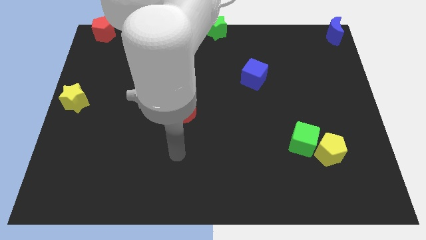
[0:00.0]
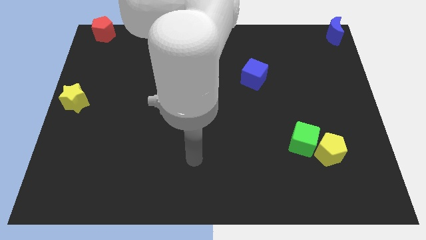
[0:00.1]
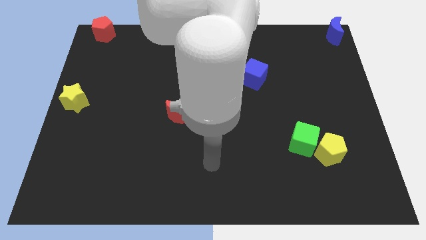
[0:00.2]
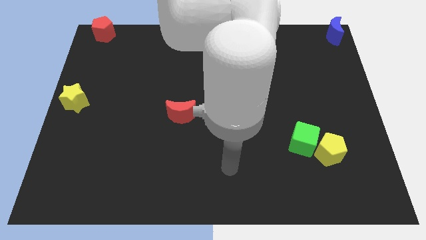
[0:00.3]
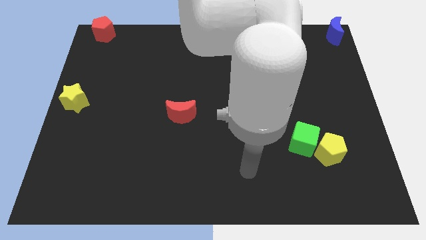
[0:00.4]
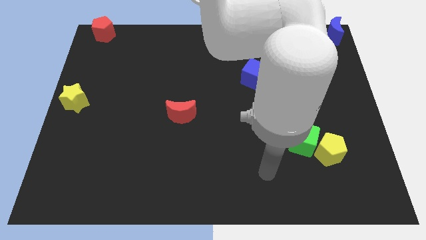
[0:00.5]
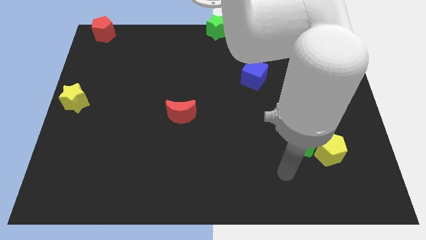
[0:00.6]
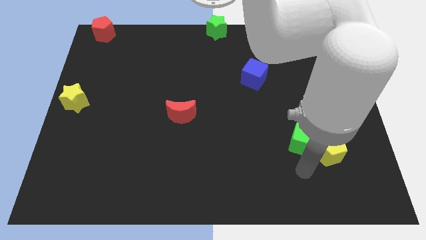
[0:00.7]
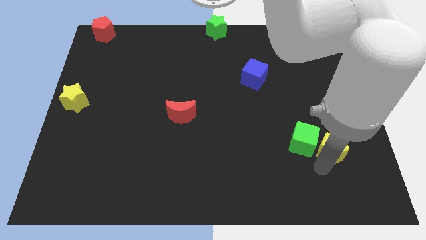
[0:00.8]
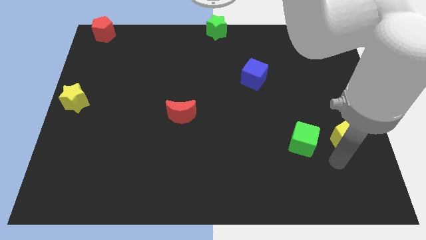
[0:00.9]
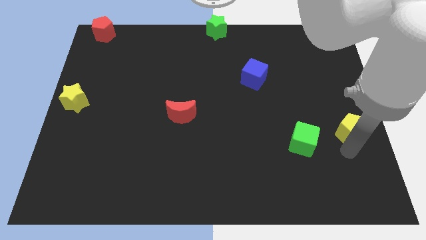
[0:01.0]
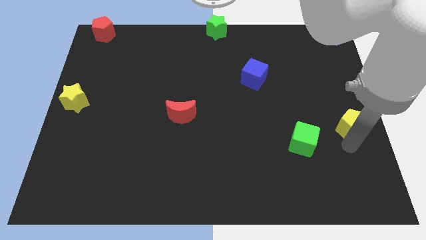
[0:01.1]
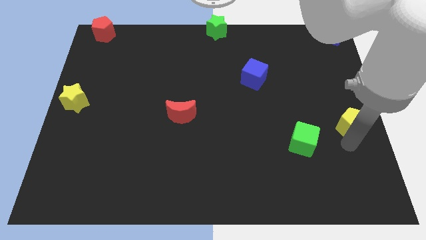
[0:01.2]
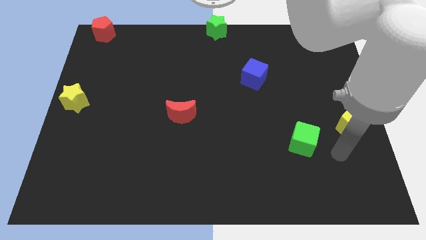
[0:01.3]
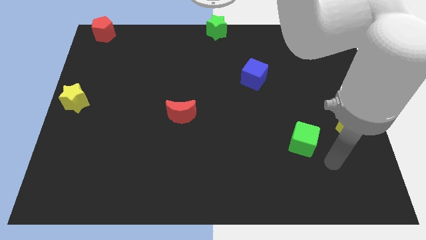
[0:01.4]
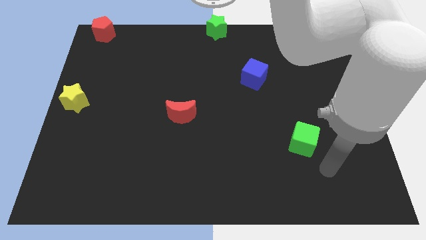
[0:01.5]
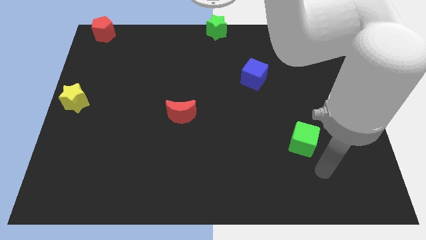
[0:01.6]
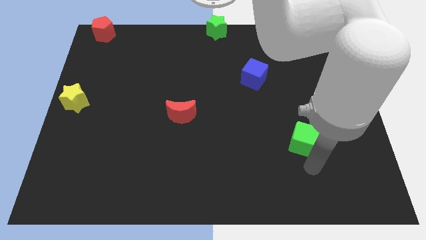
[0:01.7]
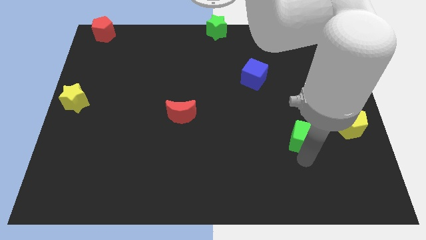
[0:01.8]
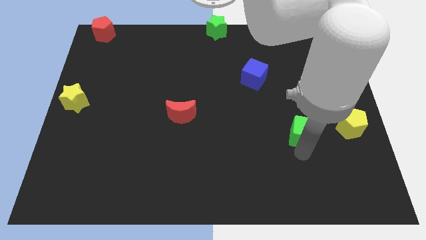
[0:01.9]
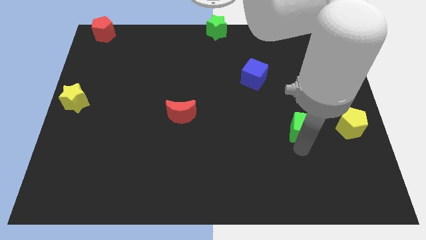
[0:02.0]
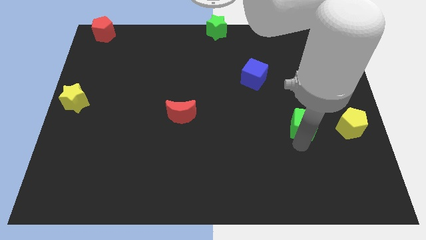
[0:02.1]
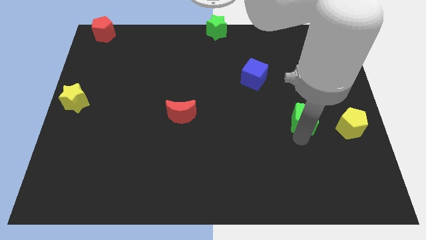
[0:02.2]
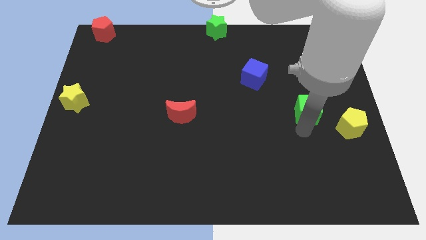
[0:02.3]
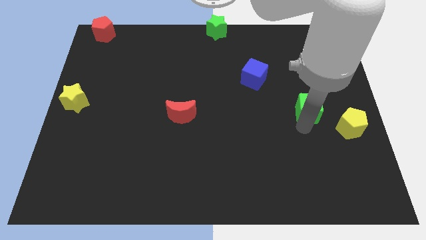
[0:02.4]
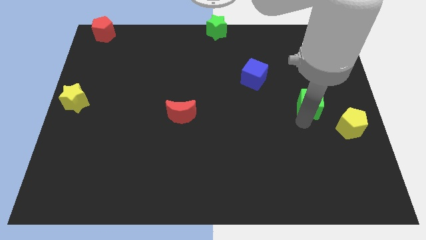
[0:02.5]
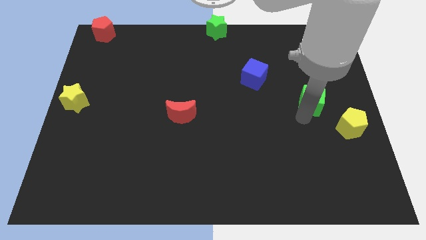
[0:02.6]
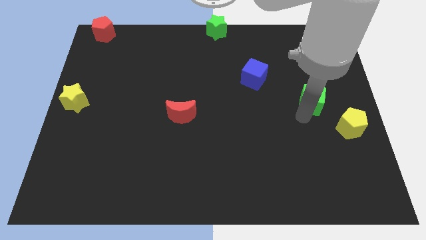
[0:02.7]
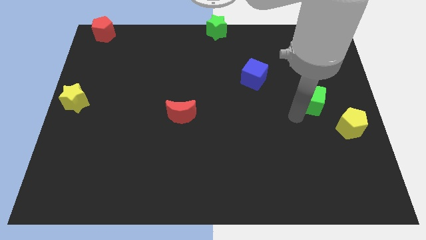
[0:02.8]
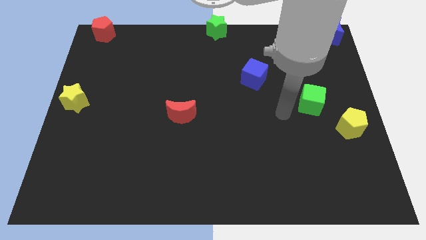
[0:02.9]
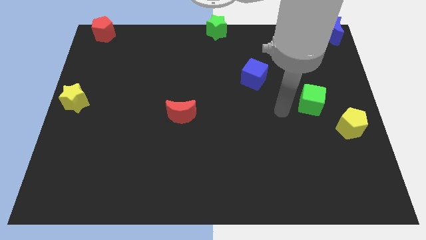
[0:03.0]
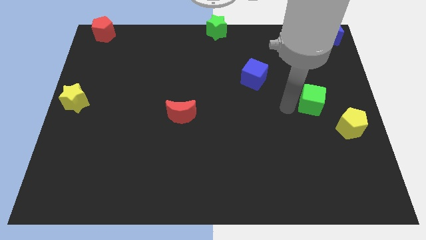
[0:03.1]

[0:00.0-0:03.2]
place the green cube and yellow pentagon diagonally on the bottom right side of the blue cube

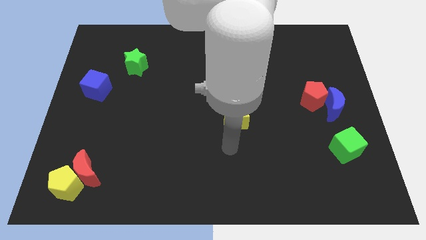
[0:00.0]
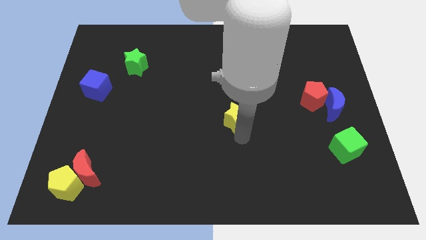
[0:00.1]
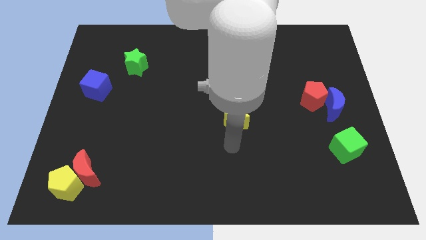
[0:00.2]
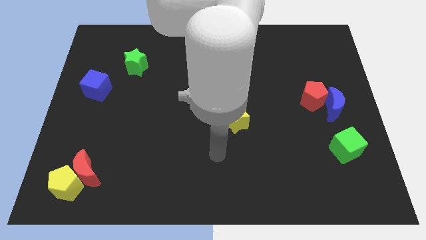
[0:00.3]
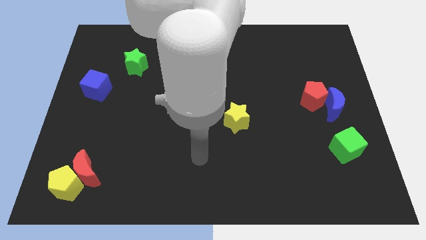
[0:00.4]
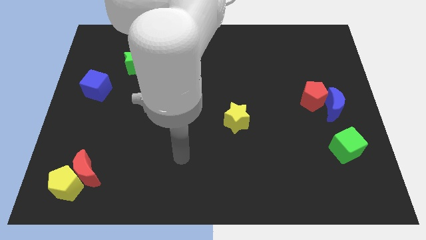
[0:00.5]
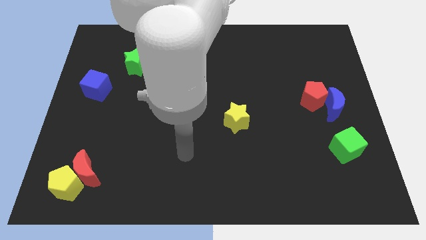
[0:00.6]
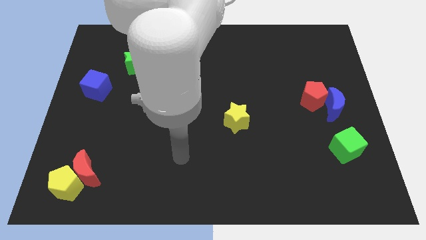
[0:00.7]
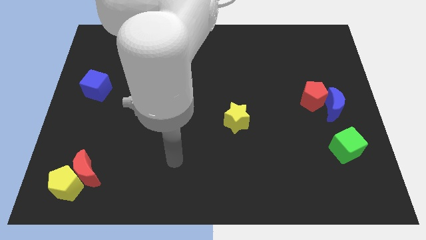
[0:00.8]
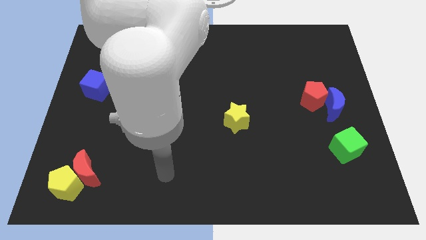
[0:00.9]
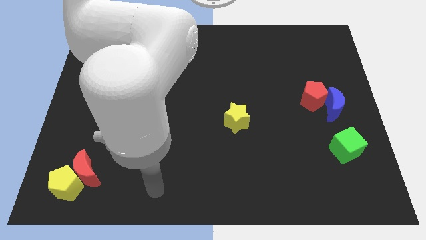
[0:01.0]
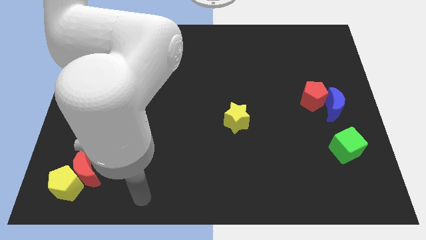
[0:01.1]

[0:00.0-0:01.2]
move the arm away from the yellow star

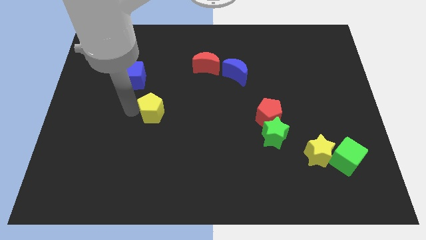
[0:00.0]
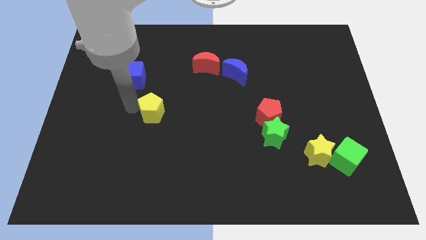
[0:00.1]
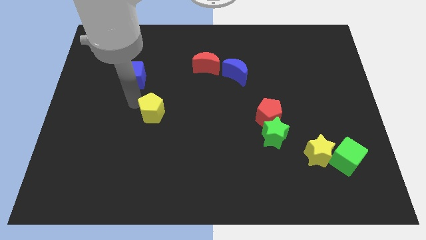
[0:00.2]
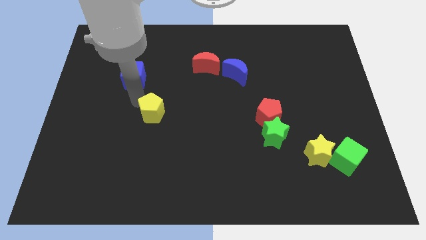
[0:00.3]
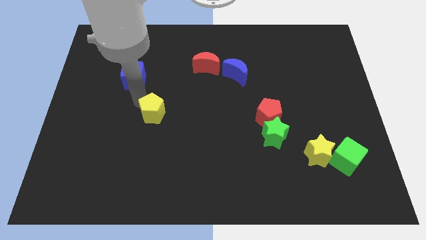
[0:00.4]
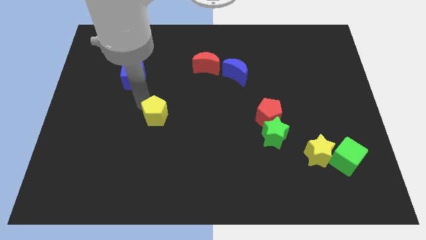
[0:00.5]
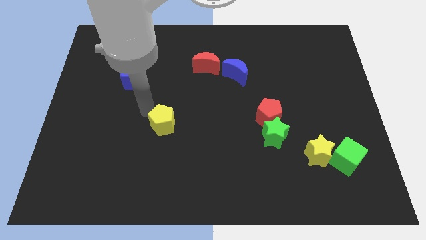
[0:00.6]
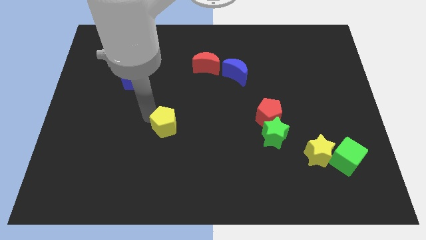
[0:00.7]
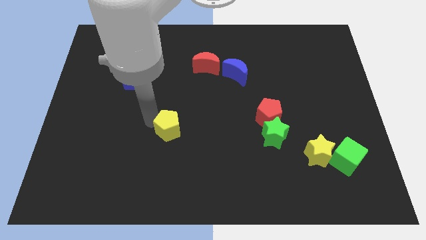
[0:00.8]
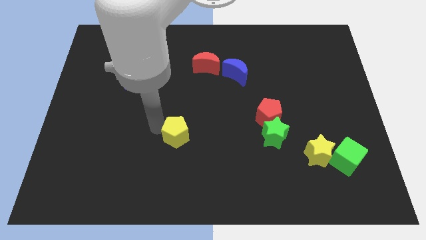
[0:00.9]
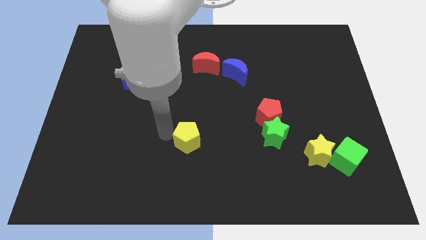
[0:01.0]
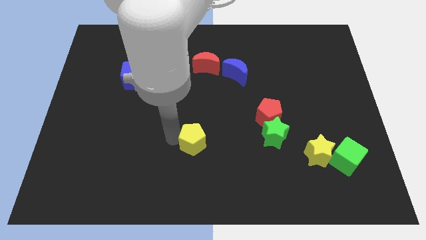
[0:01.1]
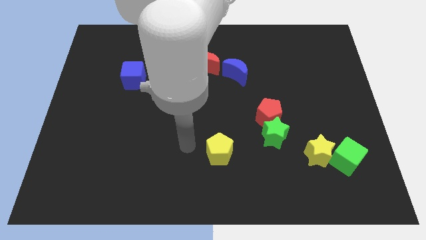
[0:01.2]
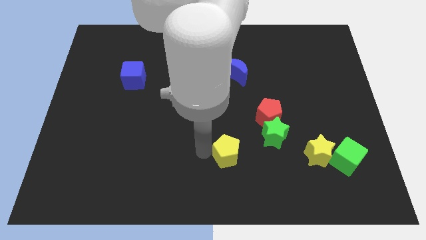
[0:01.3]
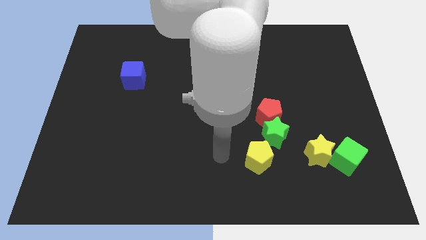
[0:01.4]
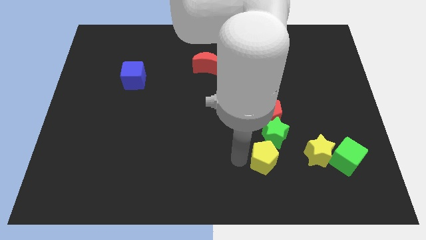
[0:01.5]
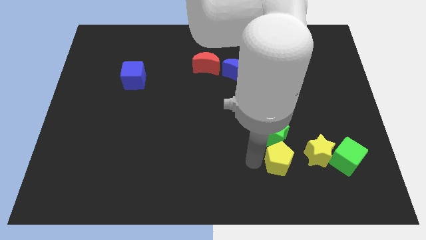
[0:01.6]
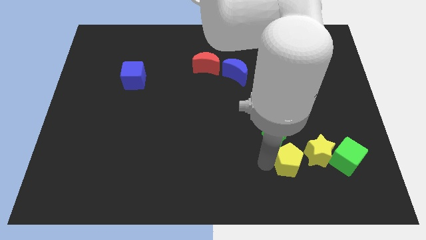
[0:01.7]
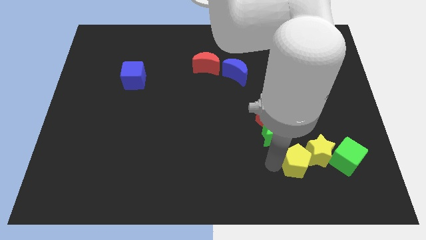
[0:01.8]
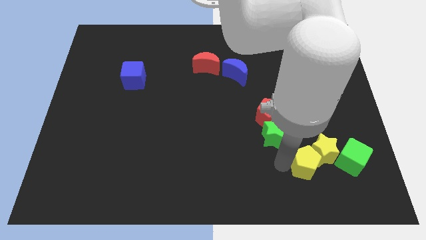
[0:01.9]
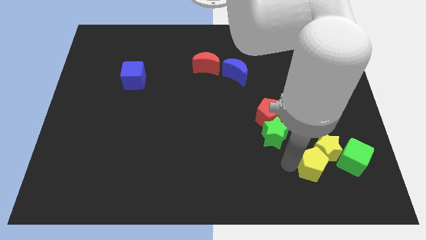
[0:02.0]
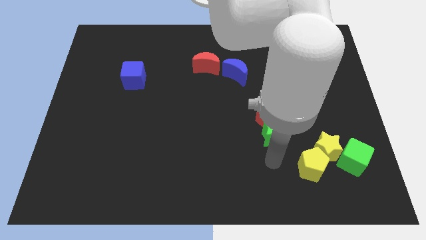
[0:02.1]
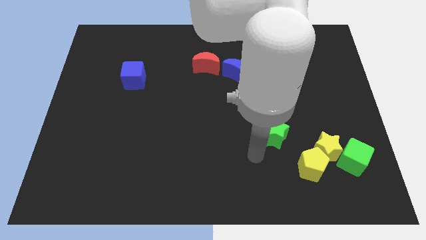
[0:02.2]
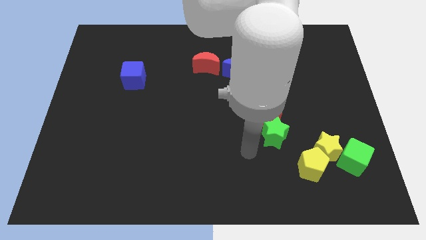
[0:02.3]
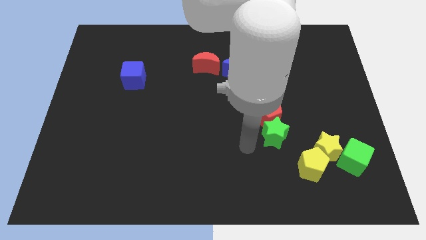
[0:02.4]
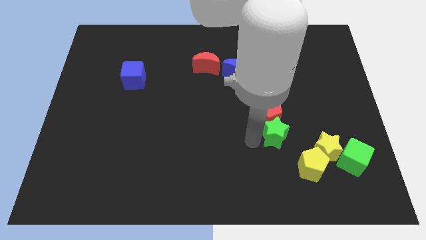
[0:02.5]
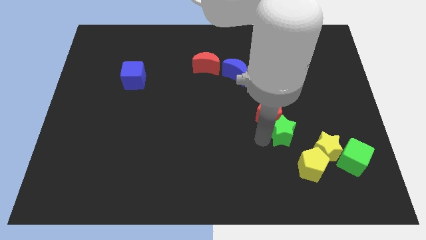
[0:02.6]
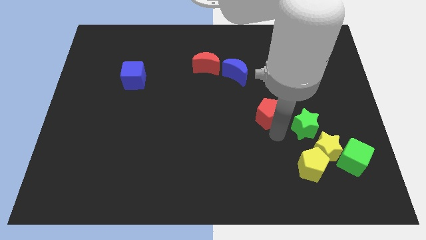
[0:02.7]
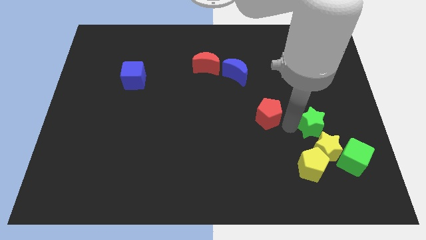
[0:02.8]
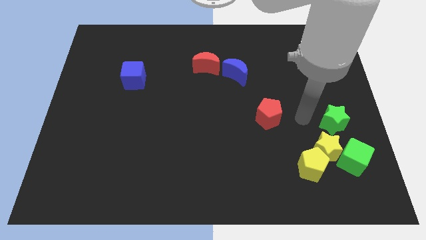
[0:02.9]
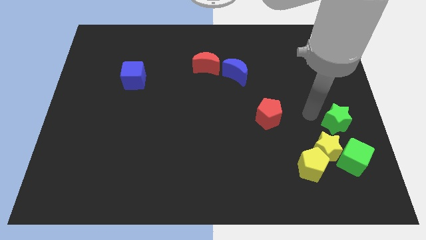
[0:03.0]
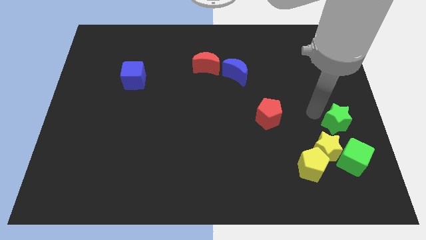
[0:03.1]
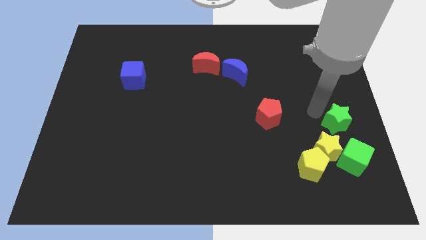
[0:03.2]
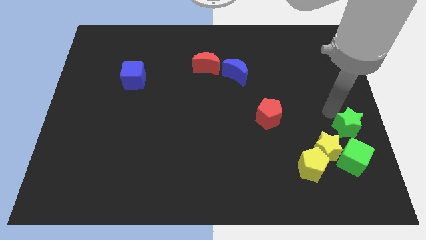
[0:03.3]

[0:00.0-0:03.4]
push green star above green cube

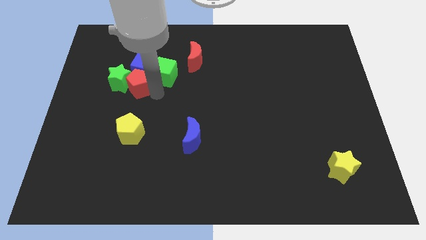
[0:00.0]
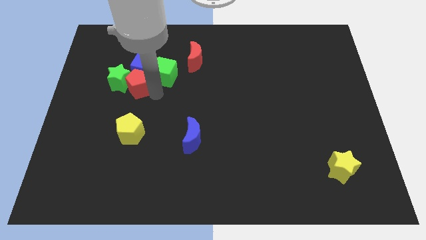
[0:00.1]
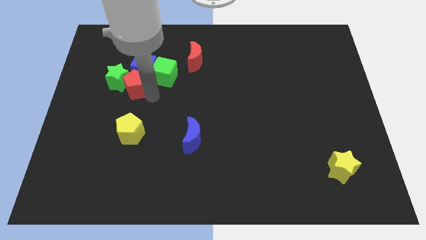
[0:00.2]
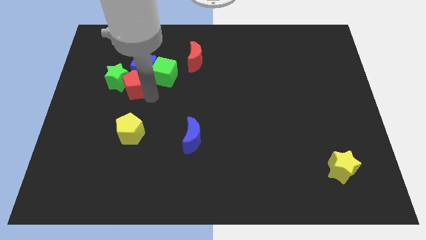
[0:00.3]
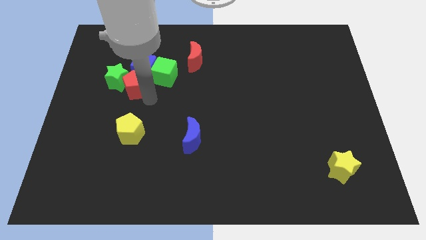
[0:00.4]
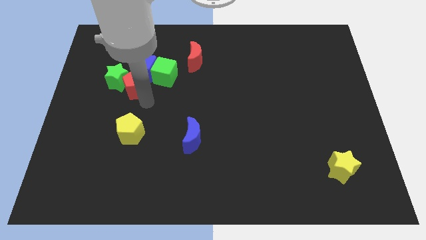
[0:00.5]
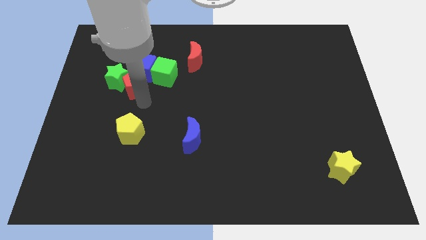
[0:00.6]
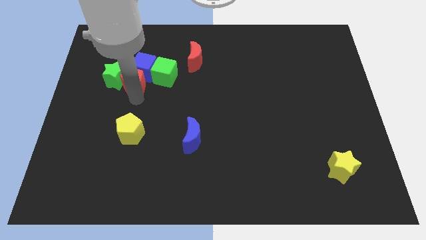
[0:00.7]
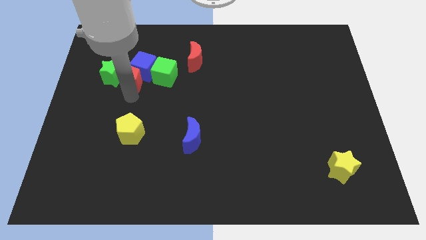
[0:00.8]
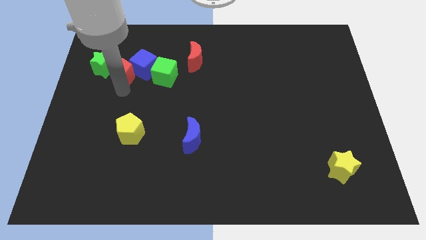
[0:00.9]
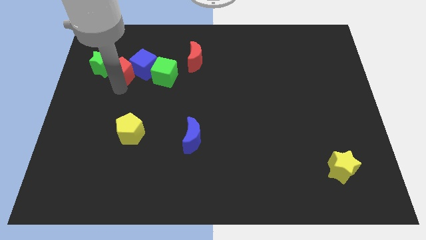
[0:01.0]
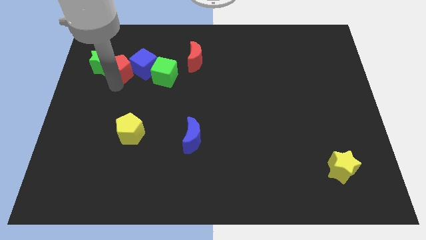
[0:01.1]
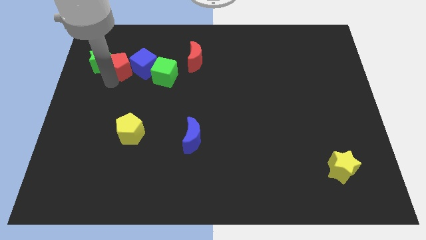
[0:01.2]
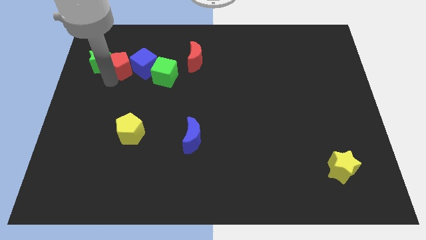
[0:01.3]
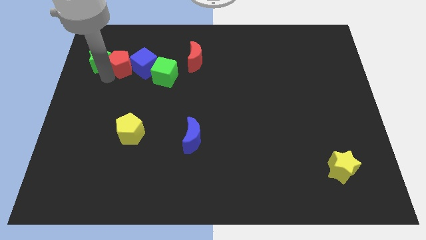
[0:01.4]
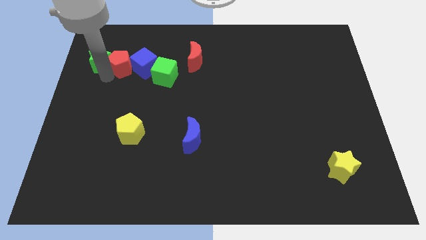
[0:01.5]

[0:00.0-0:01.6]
move red pentagon in between blue cube and green star
